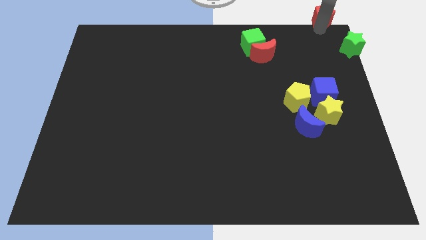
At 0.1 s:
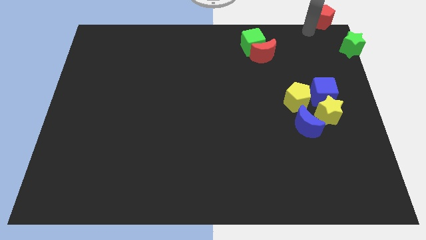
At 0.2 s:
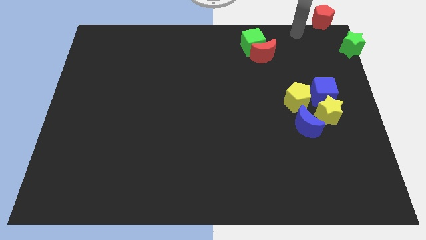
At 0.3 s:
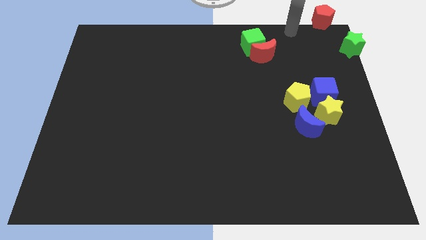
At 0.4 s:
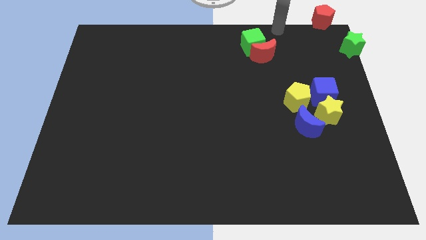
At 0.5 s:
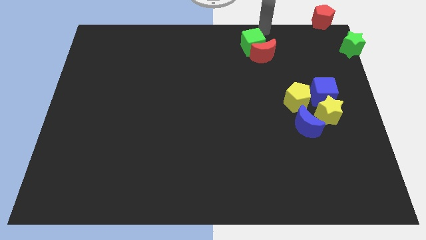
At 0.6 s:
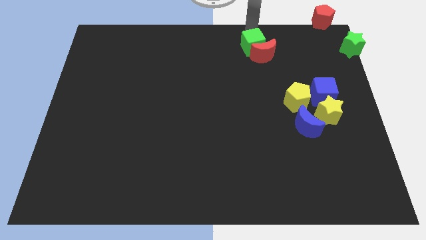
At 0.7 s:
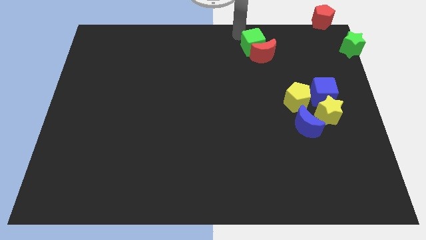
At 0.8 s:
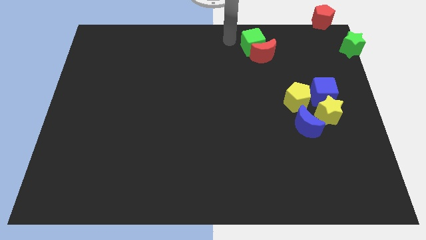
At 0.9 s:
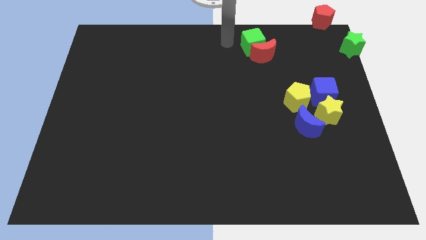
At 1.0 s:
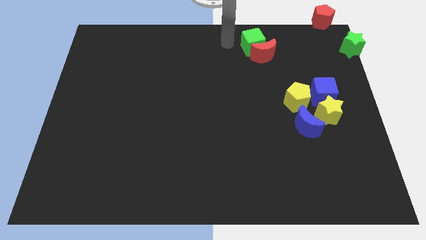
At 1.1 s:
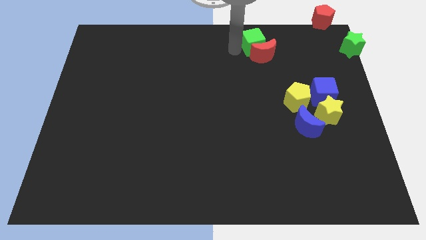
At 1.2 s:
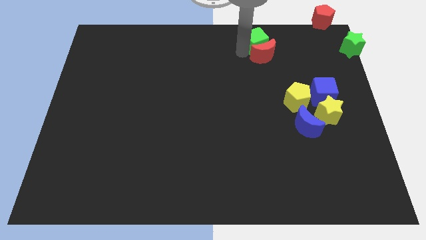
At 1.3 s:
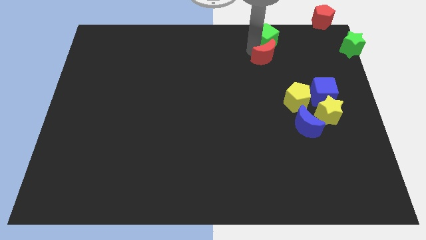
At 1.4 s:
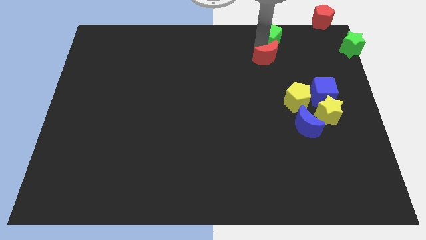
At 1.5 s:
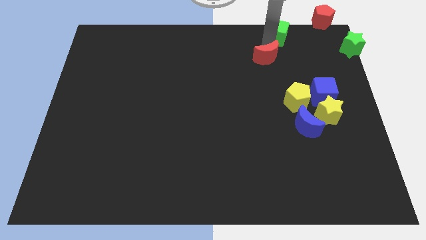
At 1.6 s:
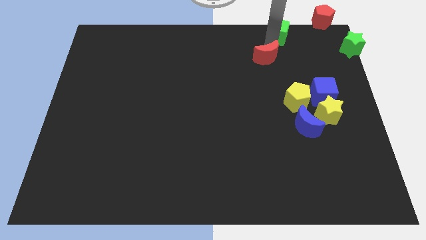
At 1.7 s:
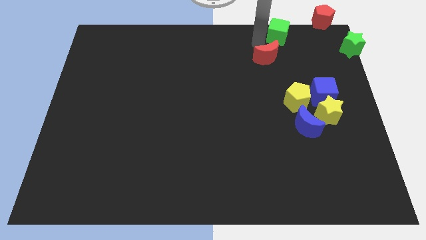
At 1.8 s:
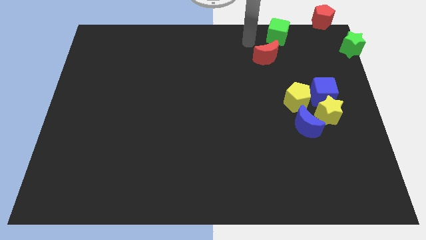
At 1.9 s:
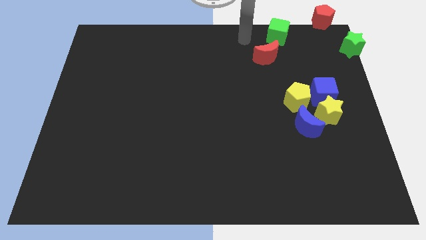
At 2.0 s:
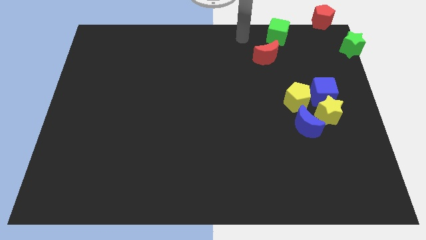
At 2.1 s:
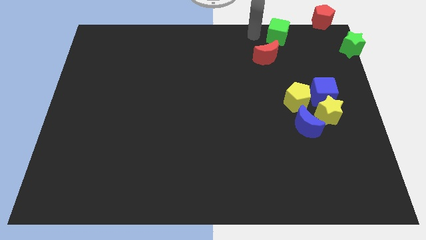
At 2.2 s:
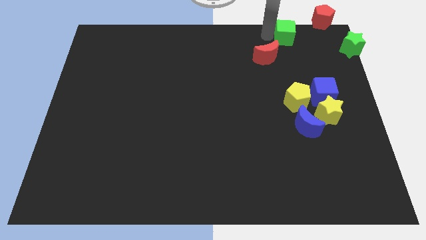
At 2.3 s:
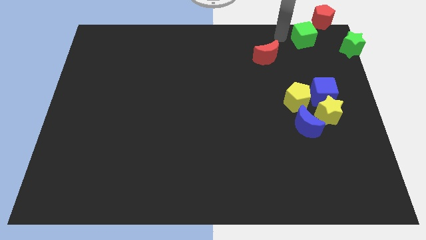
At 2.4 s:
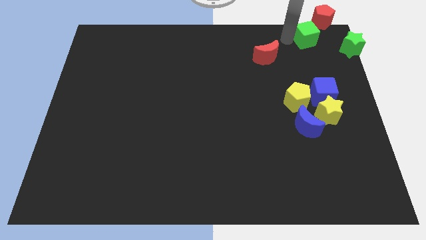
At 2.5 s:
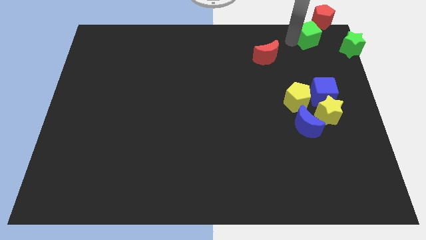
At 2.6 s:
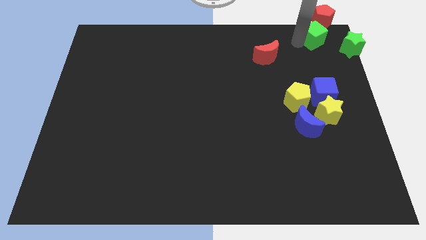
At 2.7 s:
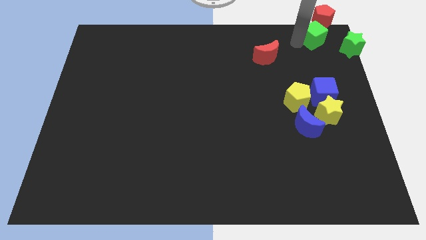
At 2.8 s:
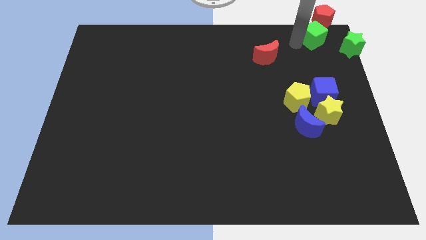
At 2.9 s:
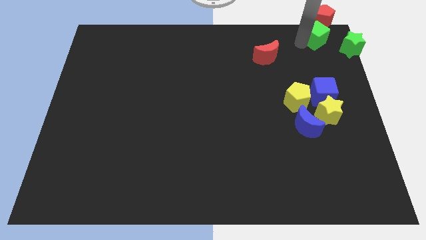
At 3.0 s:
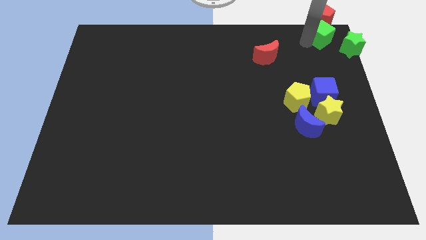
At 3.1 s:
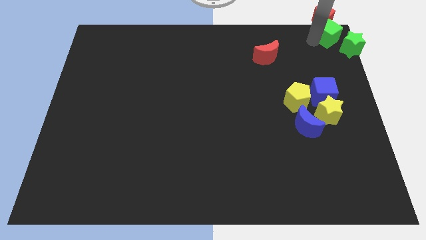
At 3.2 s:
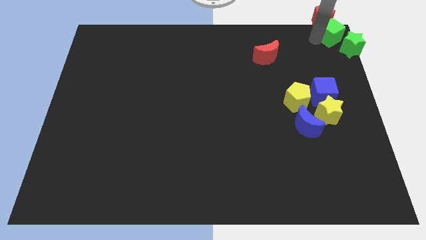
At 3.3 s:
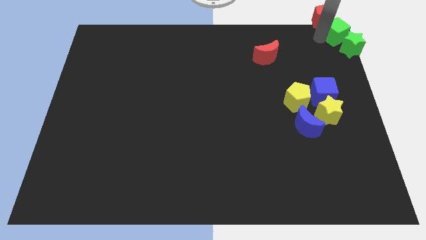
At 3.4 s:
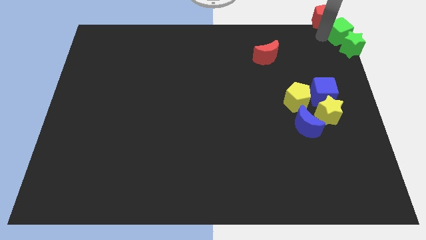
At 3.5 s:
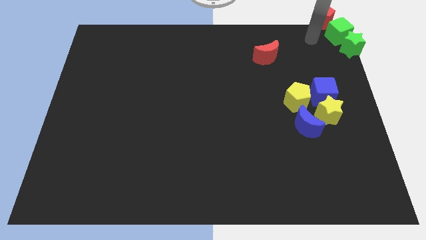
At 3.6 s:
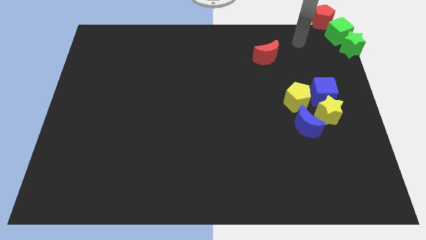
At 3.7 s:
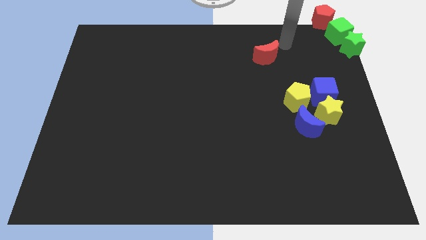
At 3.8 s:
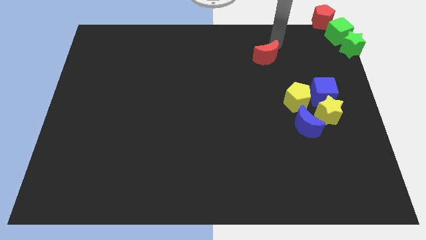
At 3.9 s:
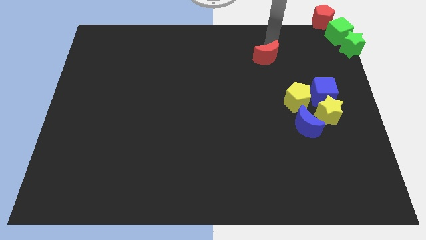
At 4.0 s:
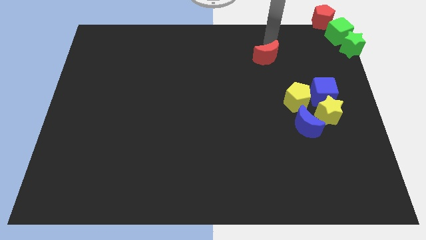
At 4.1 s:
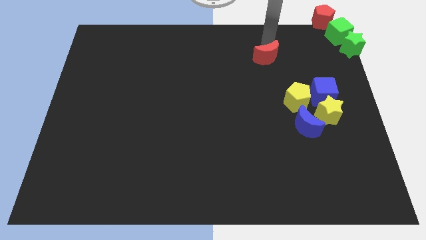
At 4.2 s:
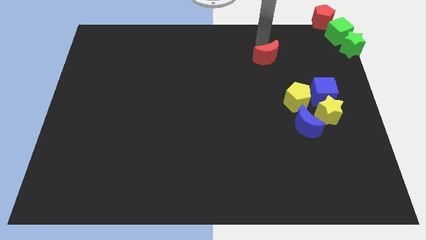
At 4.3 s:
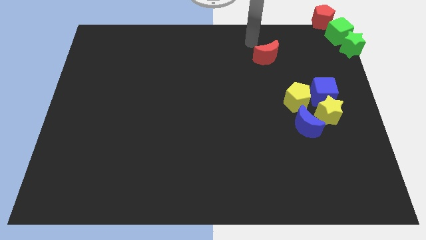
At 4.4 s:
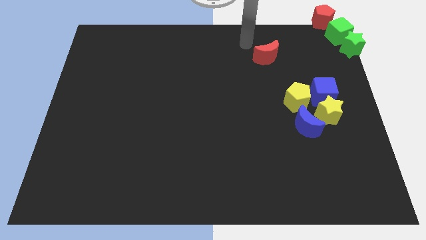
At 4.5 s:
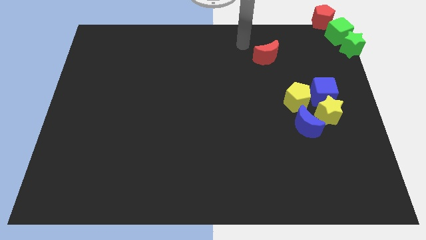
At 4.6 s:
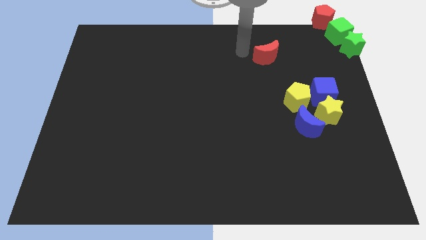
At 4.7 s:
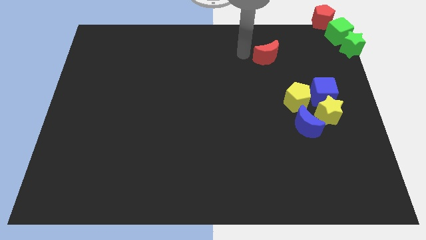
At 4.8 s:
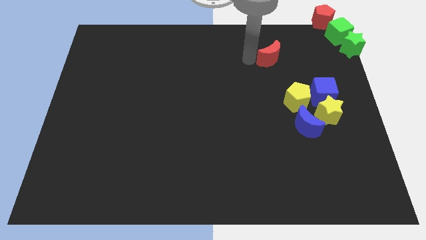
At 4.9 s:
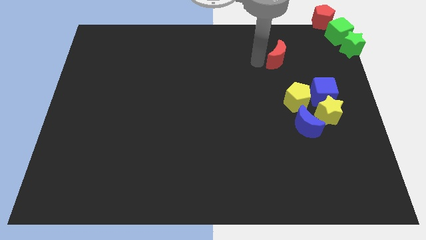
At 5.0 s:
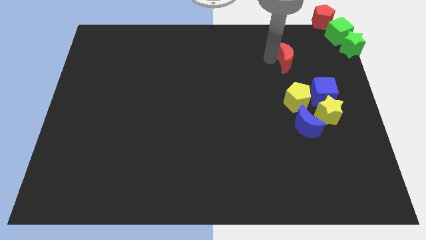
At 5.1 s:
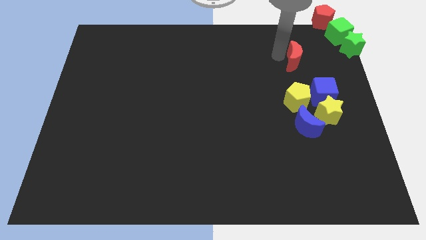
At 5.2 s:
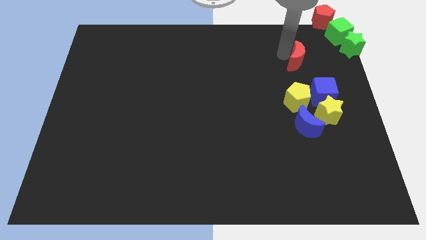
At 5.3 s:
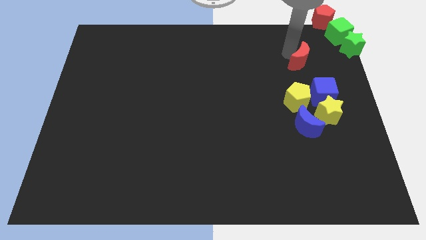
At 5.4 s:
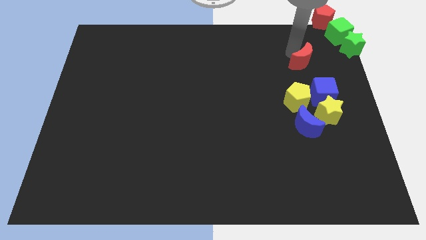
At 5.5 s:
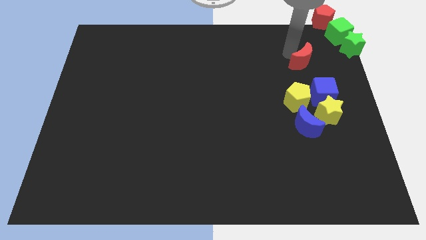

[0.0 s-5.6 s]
separate the green cube from the red moon

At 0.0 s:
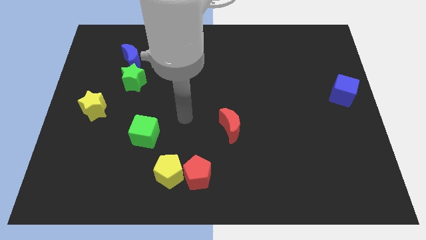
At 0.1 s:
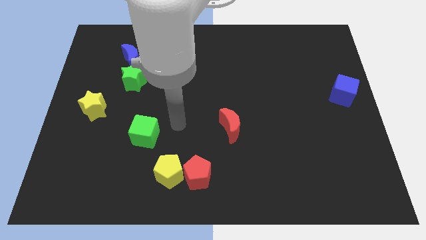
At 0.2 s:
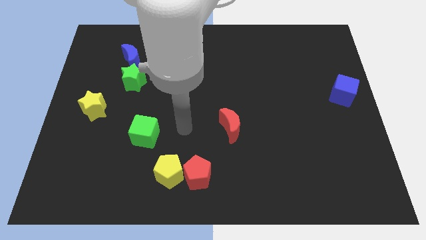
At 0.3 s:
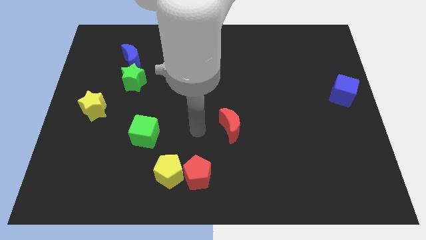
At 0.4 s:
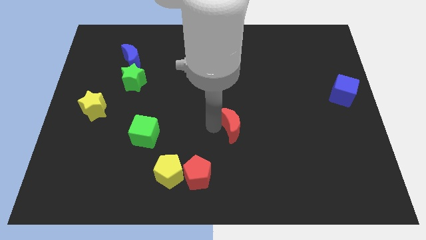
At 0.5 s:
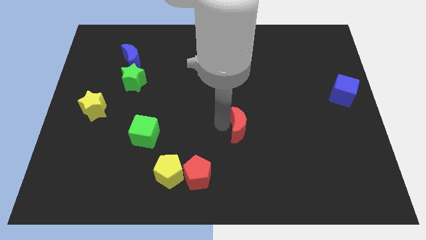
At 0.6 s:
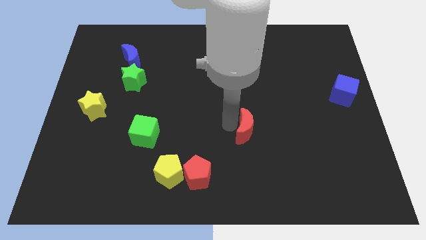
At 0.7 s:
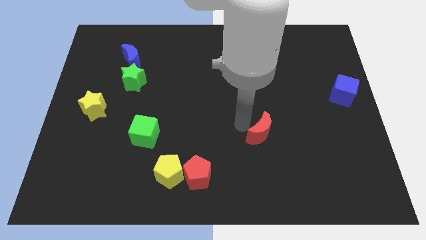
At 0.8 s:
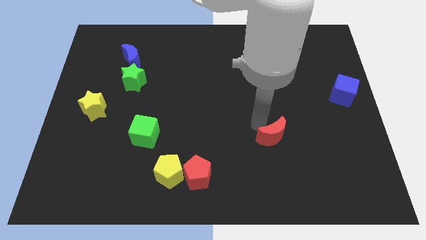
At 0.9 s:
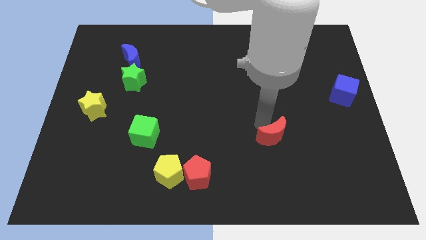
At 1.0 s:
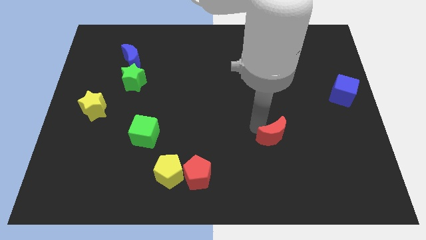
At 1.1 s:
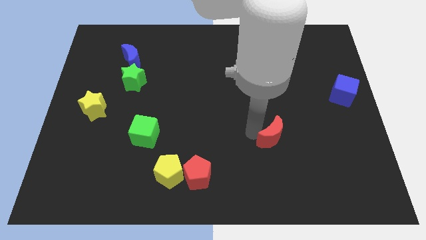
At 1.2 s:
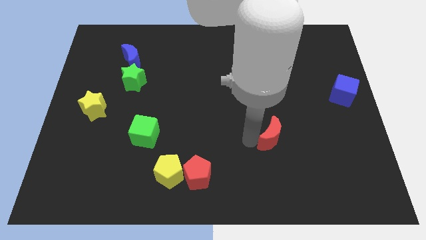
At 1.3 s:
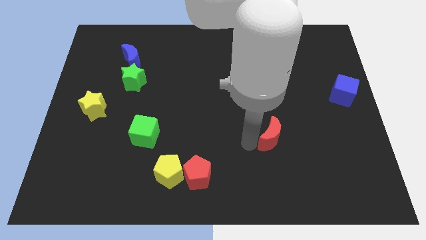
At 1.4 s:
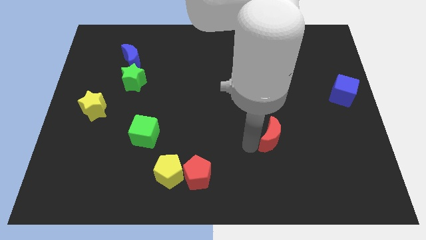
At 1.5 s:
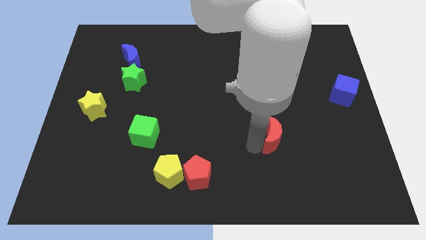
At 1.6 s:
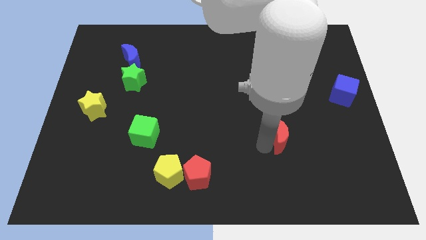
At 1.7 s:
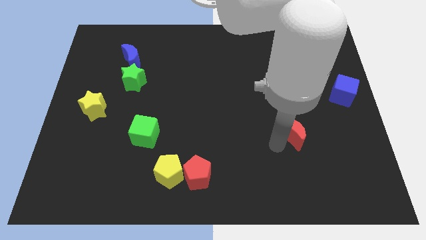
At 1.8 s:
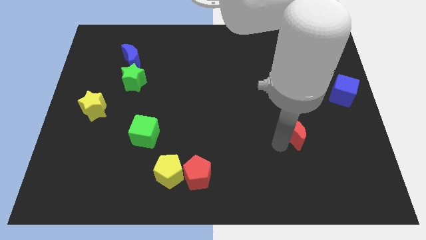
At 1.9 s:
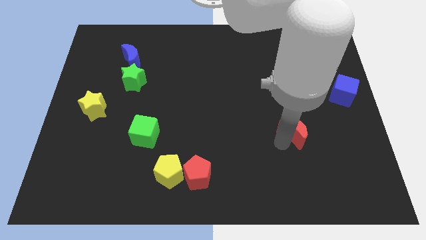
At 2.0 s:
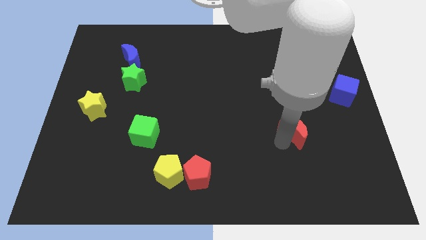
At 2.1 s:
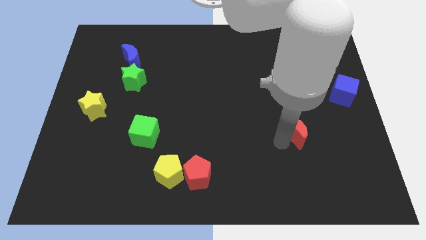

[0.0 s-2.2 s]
move the red crescent towards the right center of the board

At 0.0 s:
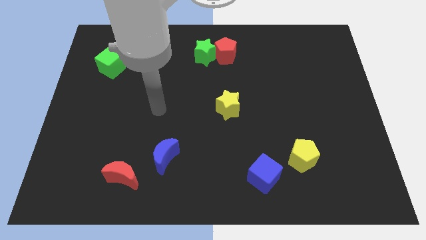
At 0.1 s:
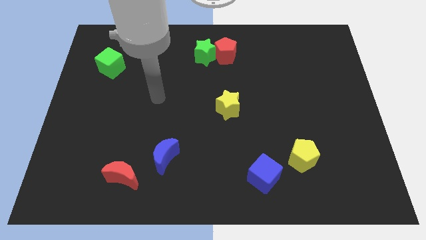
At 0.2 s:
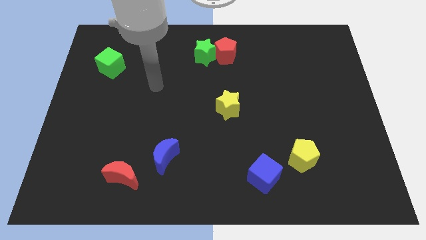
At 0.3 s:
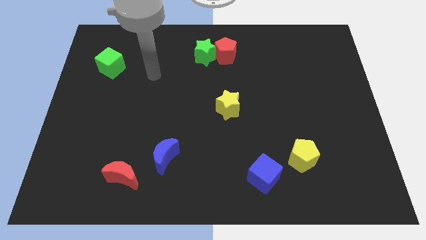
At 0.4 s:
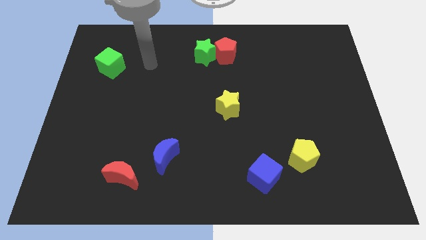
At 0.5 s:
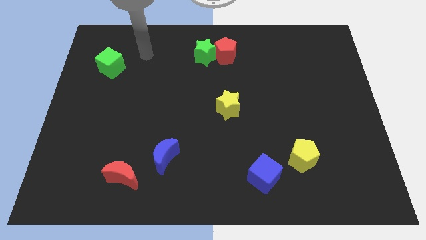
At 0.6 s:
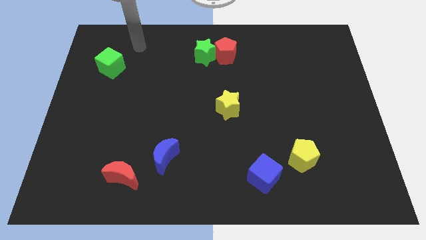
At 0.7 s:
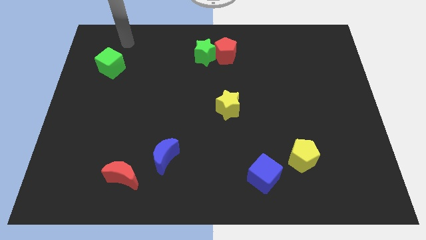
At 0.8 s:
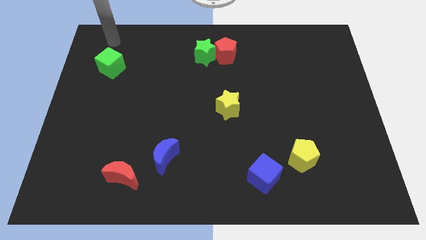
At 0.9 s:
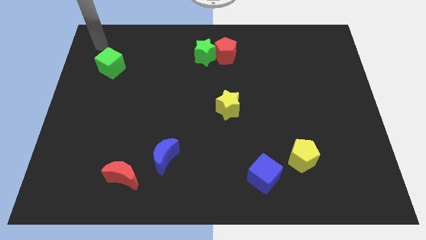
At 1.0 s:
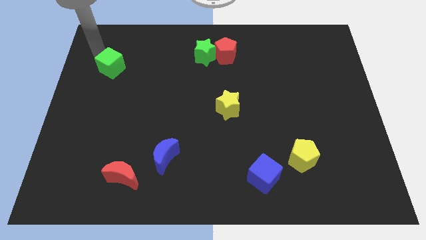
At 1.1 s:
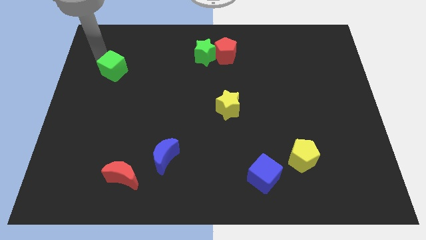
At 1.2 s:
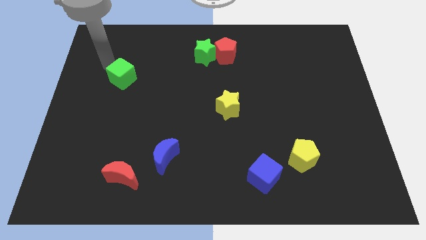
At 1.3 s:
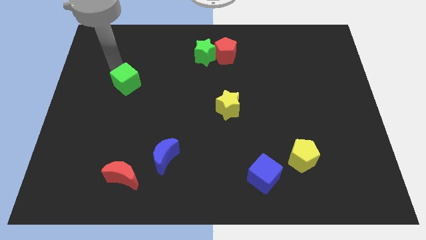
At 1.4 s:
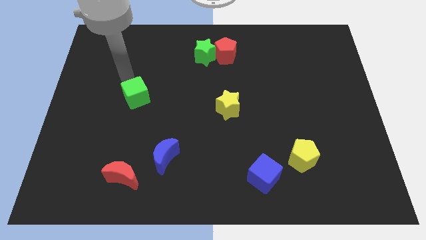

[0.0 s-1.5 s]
push the green cube diagonally down
